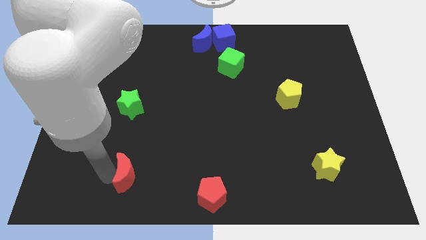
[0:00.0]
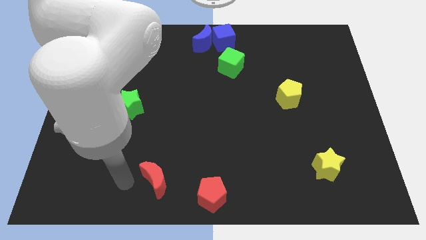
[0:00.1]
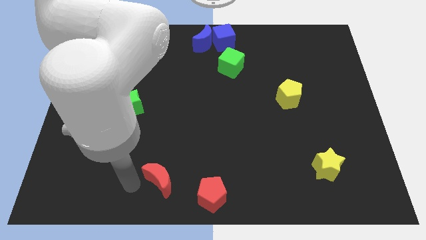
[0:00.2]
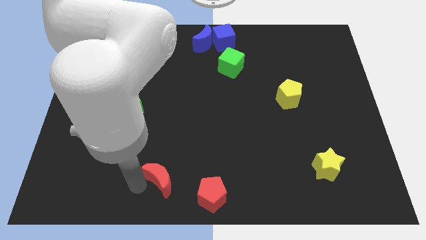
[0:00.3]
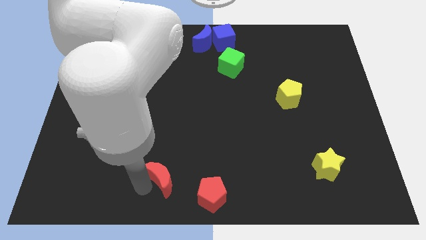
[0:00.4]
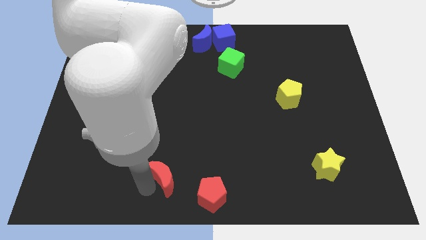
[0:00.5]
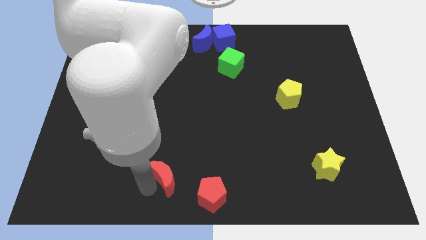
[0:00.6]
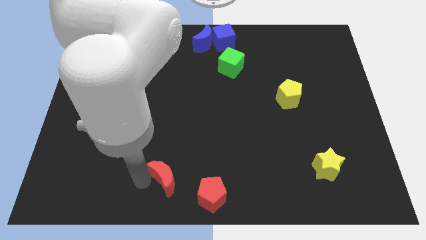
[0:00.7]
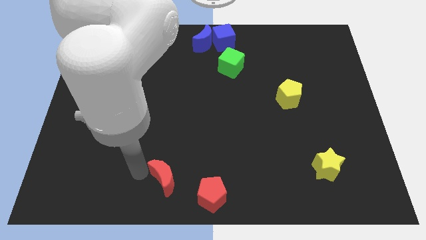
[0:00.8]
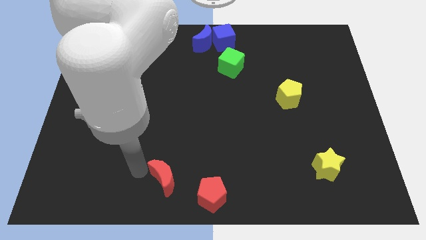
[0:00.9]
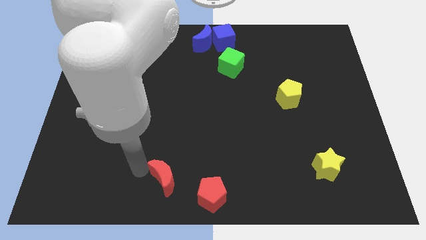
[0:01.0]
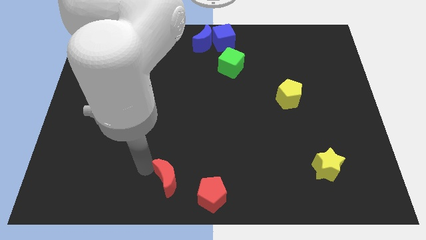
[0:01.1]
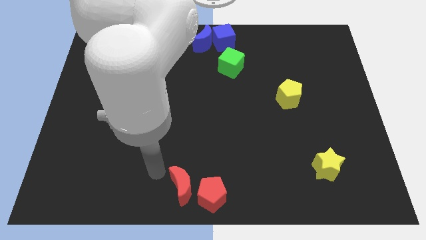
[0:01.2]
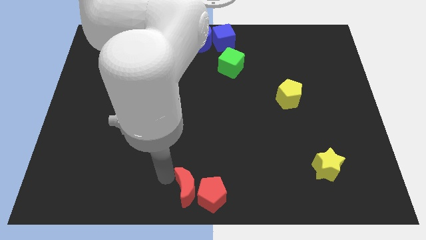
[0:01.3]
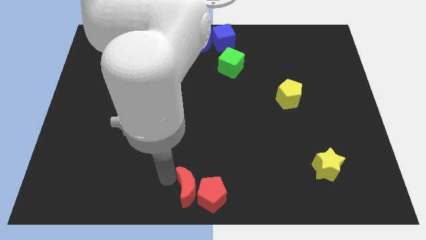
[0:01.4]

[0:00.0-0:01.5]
drag the red moon close to the red pentagon

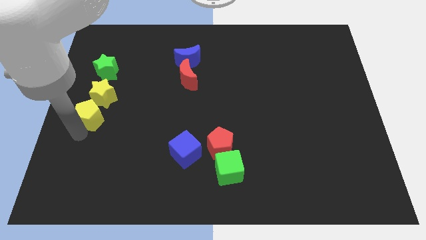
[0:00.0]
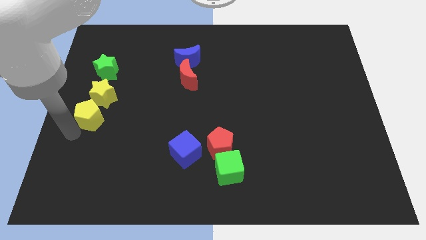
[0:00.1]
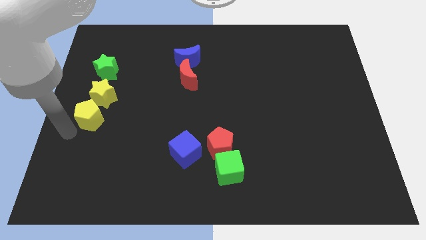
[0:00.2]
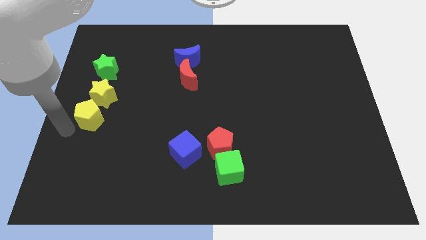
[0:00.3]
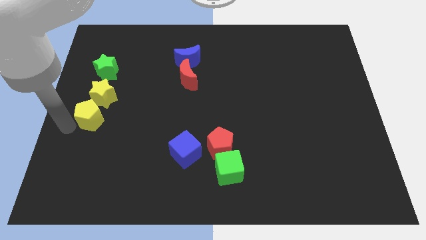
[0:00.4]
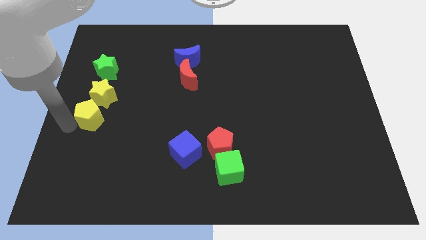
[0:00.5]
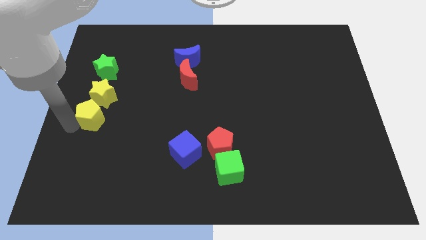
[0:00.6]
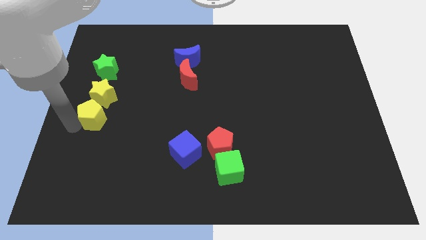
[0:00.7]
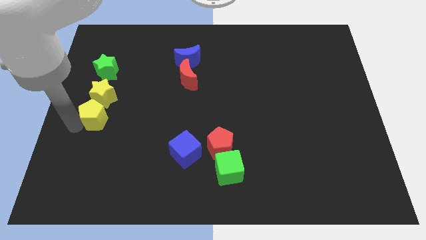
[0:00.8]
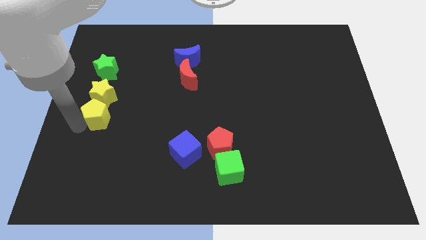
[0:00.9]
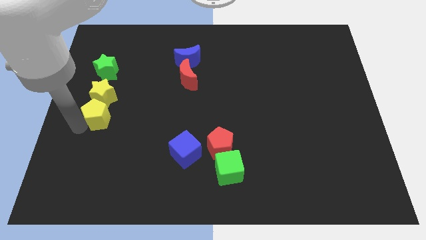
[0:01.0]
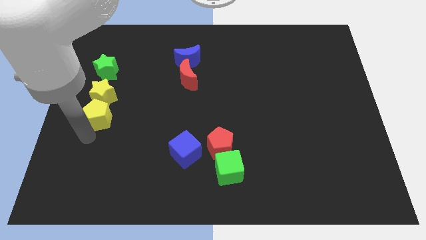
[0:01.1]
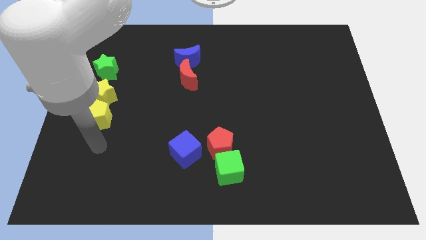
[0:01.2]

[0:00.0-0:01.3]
move the yellow pentagon close to the bottom of the yellow star

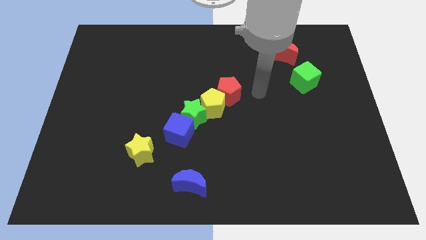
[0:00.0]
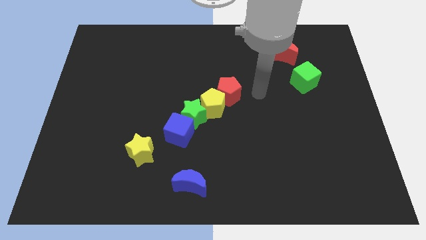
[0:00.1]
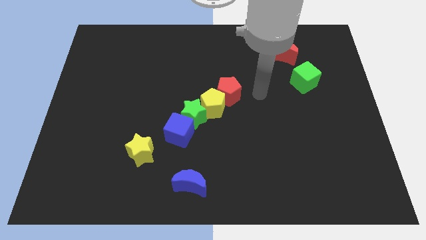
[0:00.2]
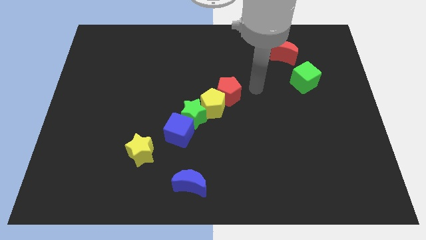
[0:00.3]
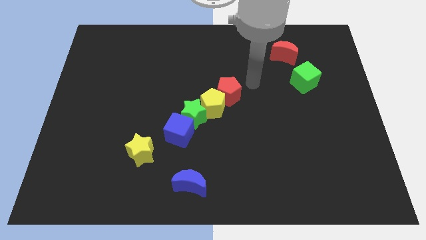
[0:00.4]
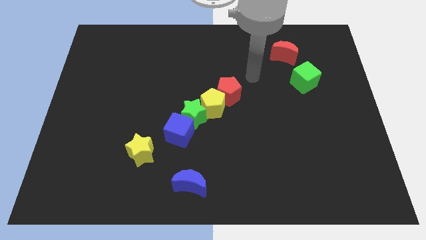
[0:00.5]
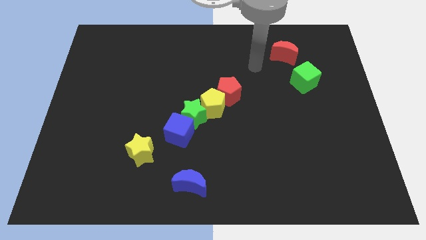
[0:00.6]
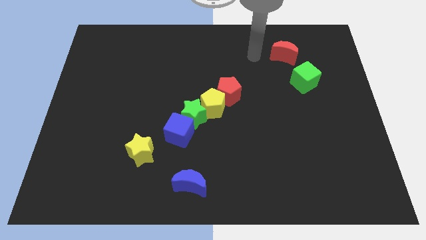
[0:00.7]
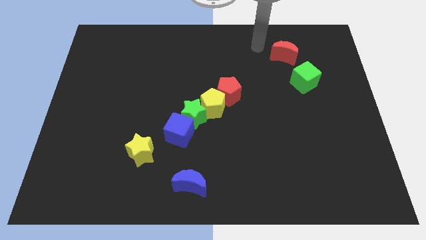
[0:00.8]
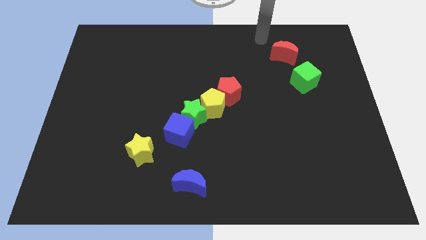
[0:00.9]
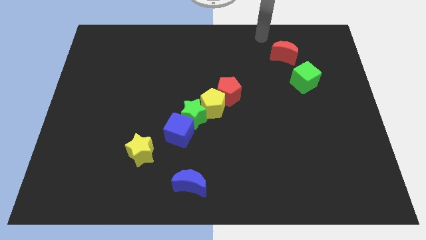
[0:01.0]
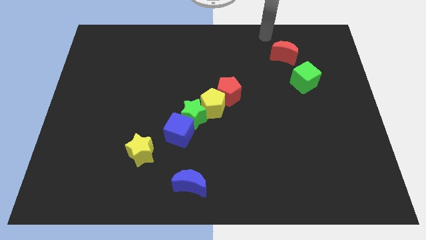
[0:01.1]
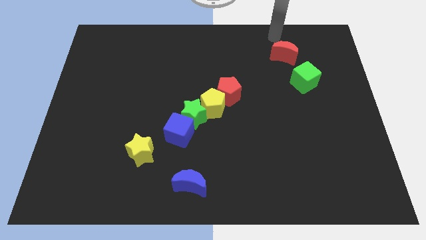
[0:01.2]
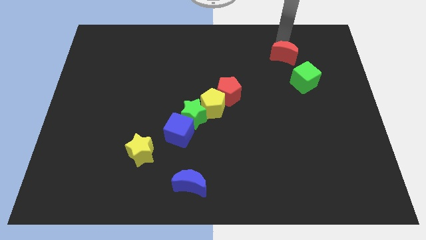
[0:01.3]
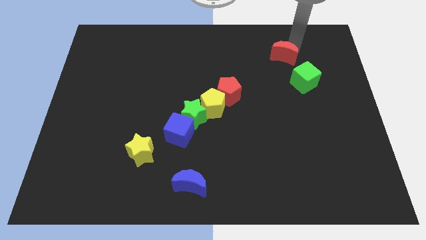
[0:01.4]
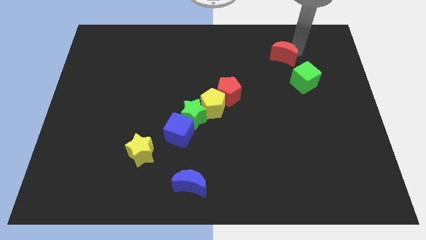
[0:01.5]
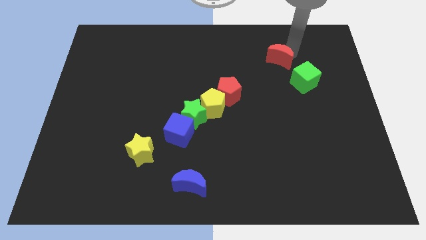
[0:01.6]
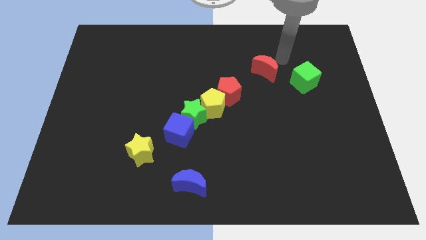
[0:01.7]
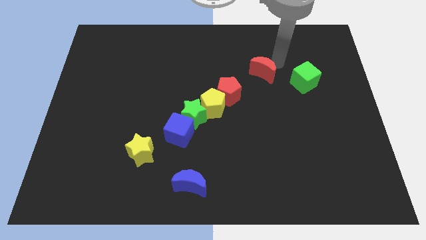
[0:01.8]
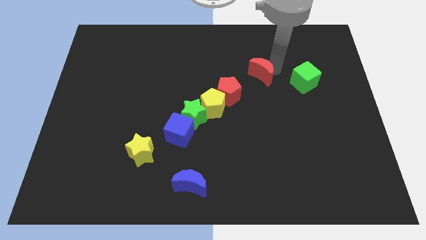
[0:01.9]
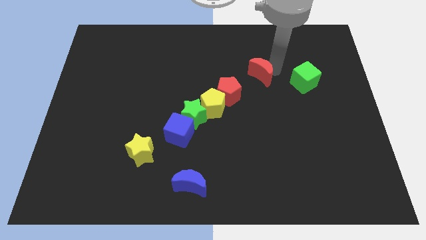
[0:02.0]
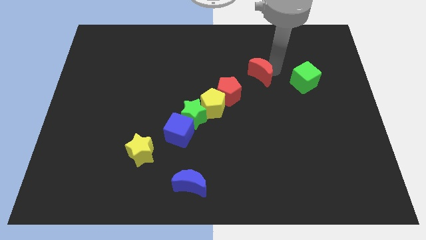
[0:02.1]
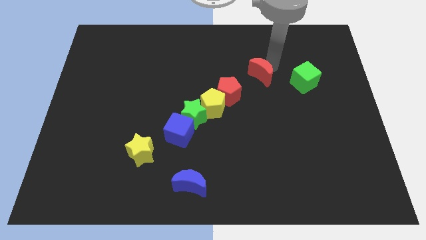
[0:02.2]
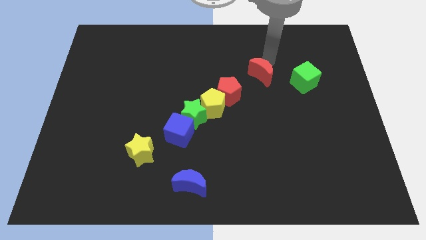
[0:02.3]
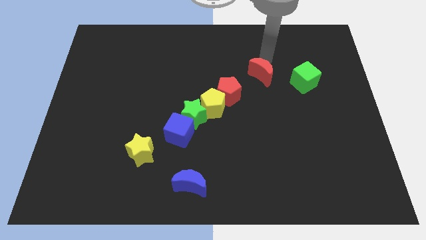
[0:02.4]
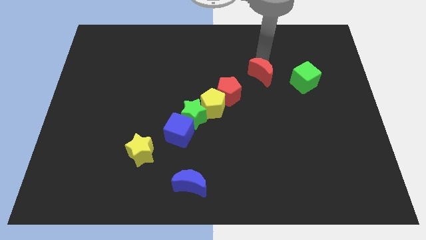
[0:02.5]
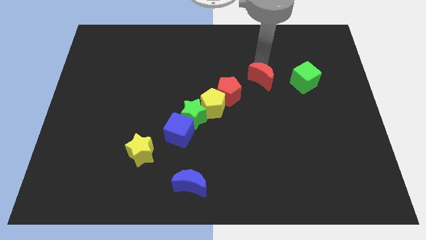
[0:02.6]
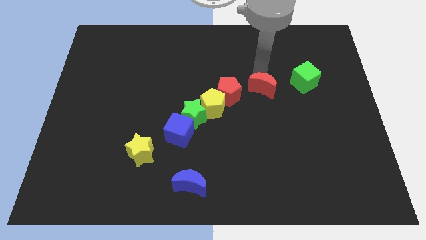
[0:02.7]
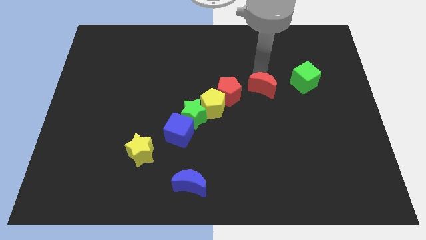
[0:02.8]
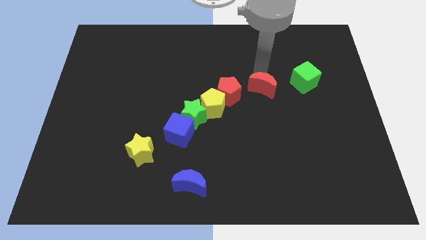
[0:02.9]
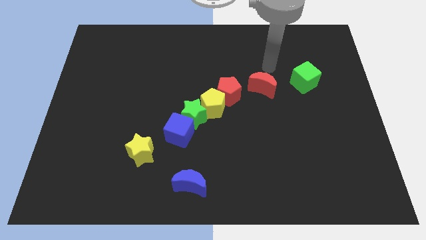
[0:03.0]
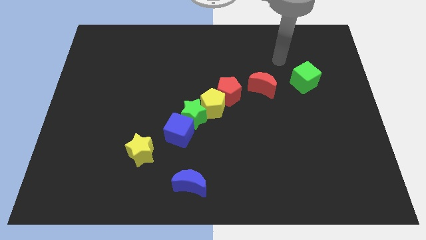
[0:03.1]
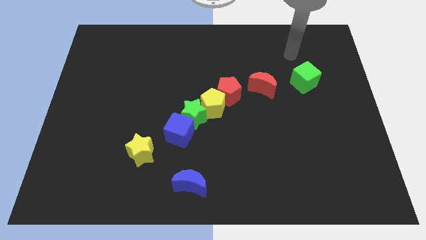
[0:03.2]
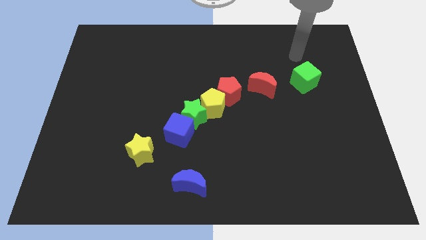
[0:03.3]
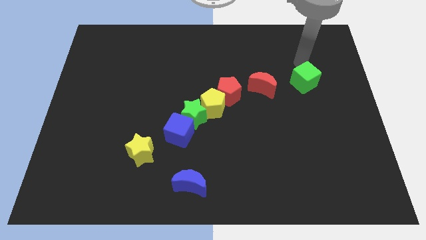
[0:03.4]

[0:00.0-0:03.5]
push the red moon towards the red pentagon

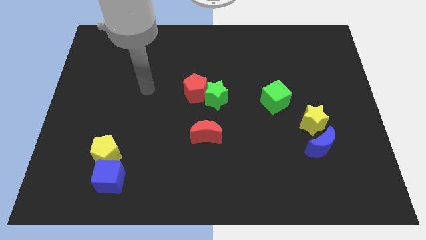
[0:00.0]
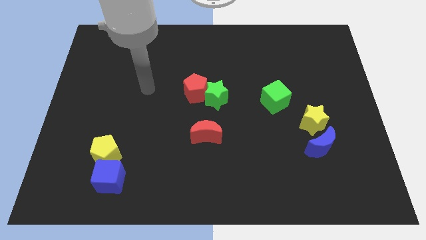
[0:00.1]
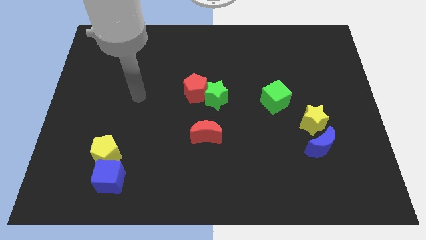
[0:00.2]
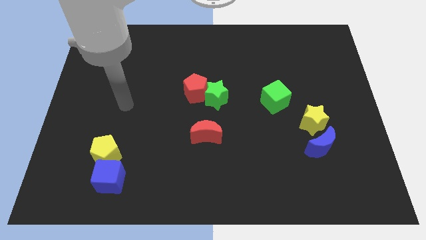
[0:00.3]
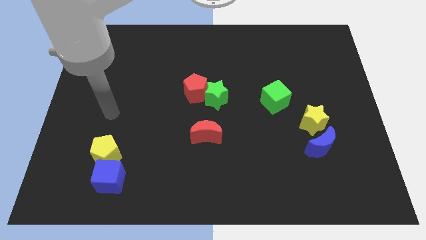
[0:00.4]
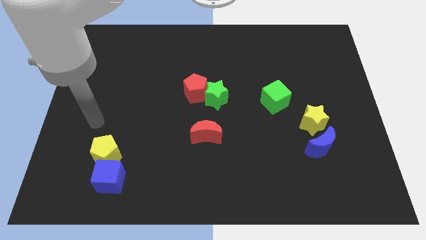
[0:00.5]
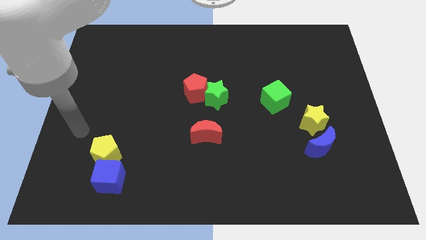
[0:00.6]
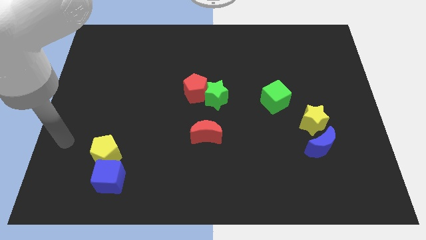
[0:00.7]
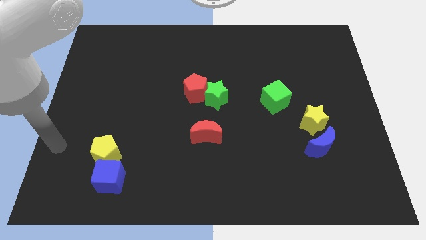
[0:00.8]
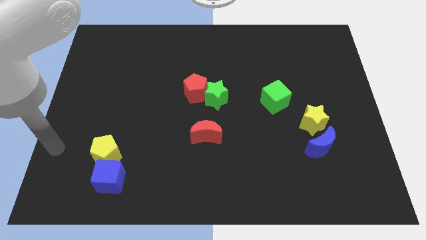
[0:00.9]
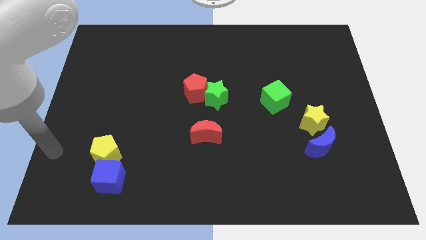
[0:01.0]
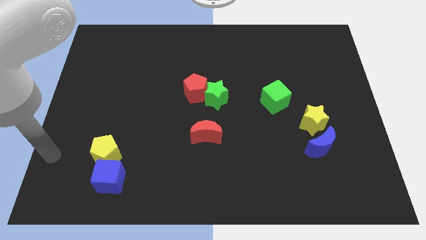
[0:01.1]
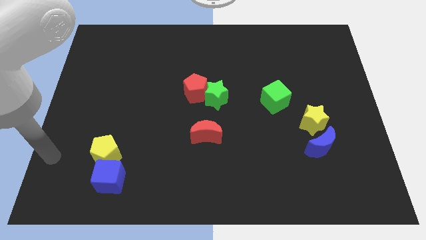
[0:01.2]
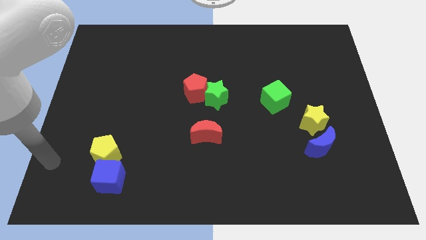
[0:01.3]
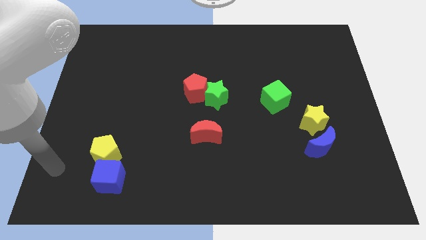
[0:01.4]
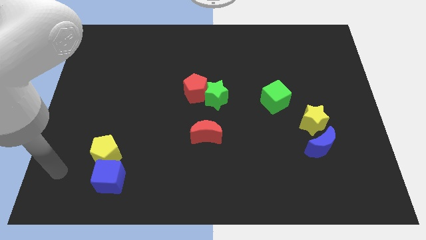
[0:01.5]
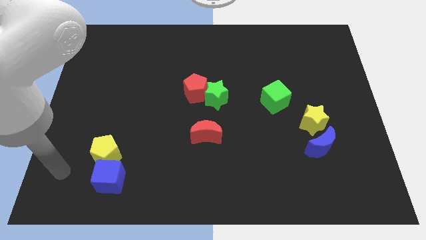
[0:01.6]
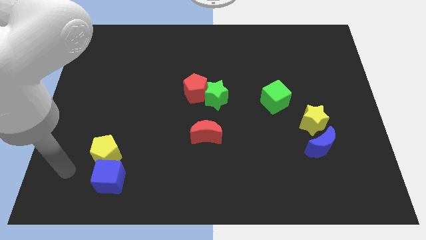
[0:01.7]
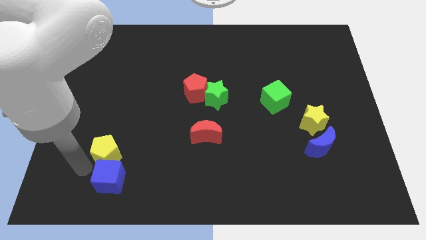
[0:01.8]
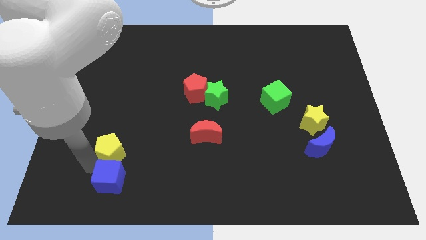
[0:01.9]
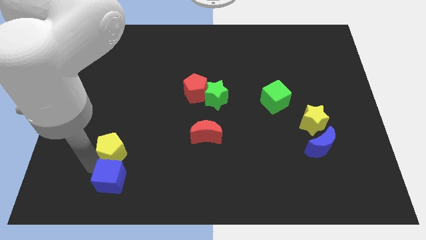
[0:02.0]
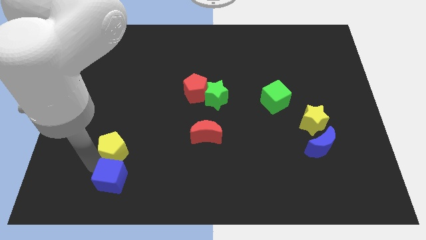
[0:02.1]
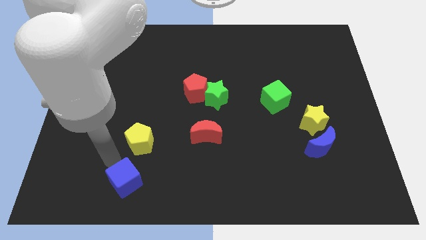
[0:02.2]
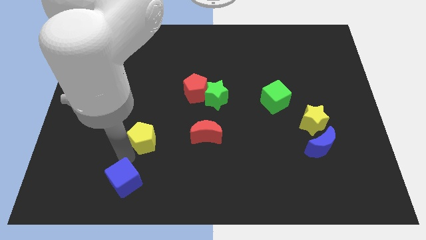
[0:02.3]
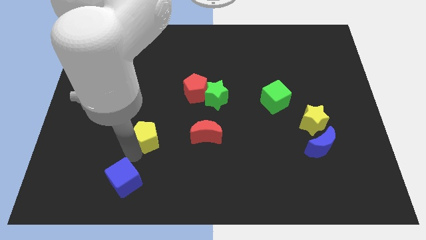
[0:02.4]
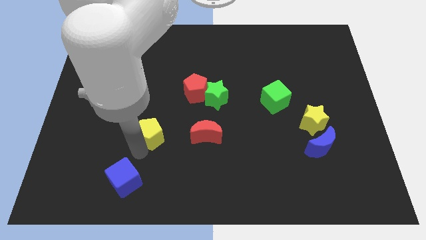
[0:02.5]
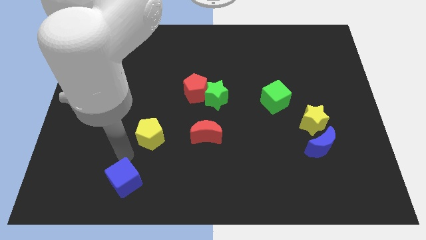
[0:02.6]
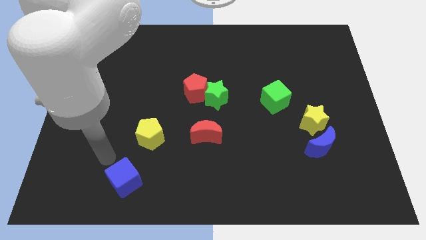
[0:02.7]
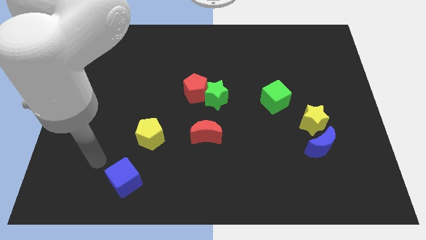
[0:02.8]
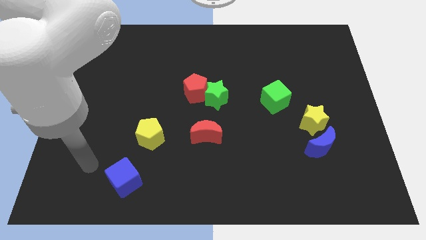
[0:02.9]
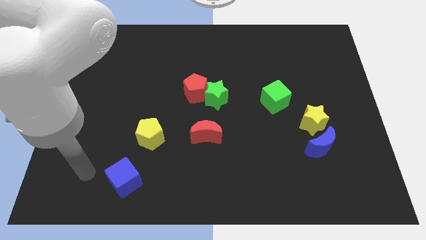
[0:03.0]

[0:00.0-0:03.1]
separate yellow pentagon from the blue cube
